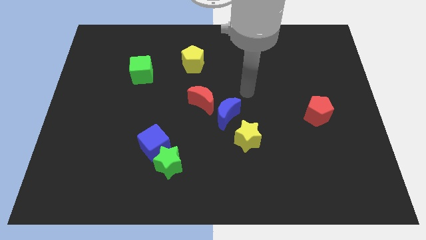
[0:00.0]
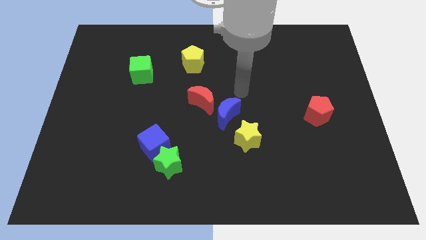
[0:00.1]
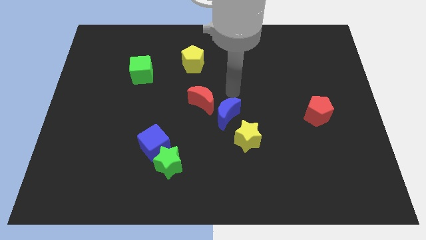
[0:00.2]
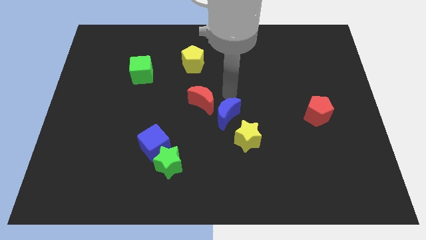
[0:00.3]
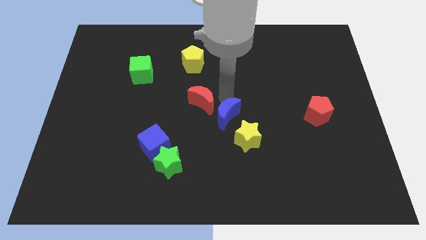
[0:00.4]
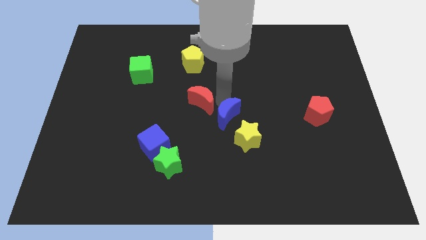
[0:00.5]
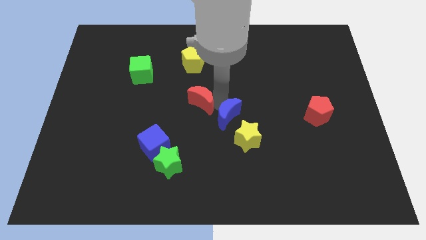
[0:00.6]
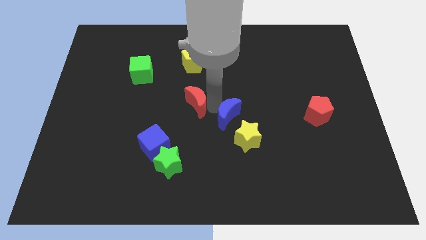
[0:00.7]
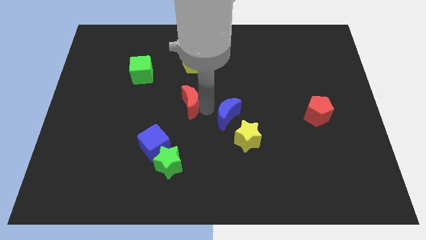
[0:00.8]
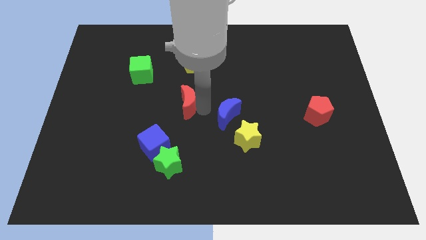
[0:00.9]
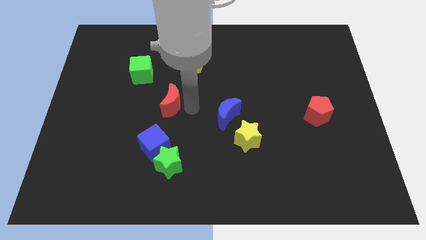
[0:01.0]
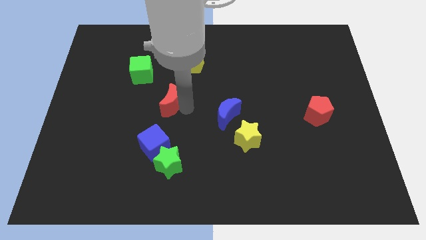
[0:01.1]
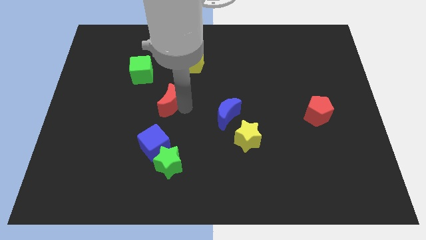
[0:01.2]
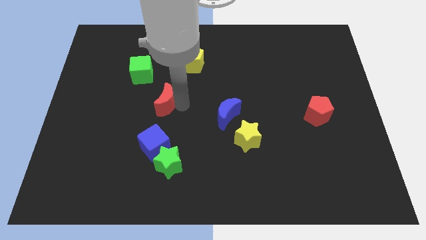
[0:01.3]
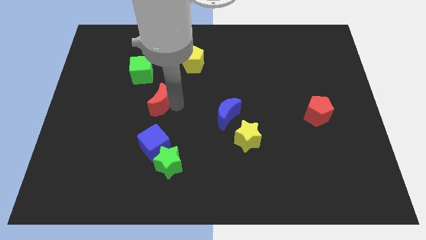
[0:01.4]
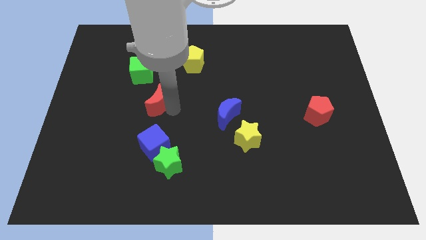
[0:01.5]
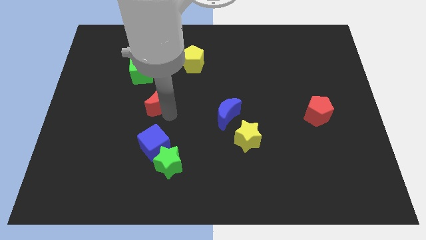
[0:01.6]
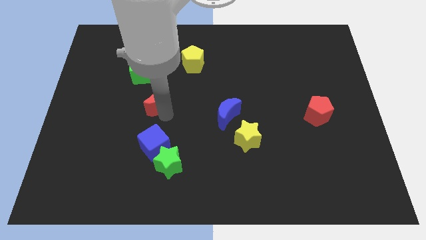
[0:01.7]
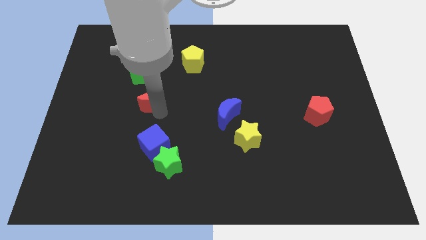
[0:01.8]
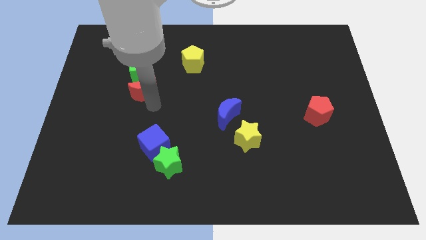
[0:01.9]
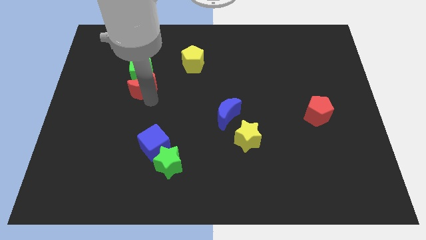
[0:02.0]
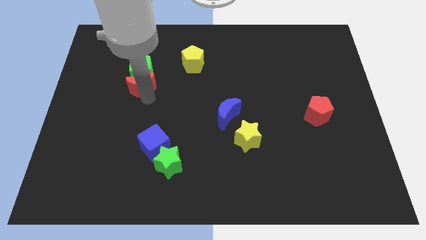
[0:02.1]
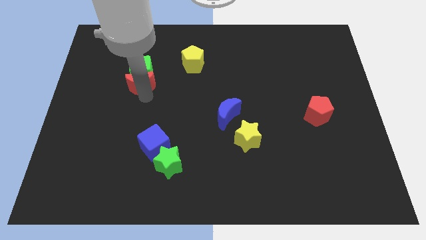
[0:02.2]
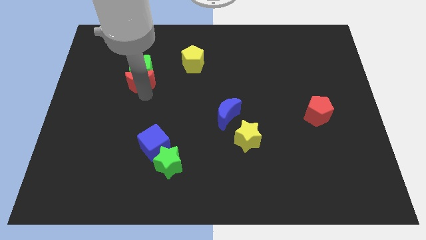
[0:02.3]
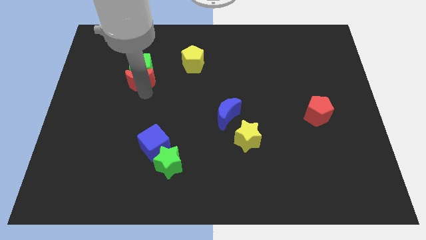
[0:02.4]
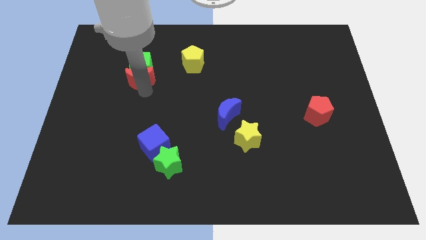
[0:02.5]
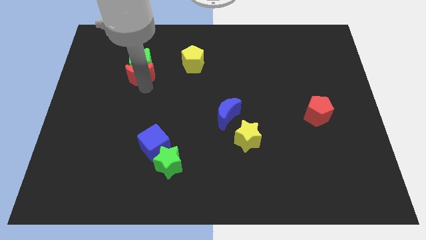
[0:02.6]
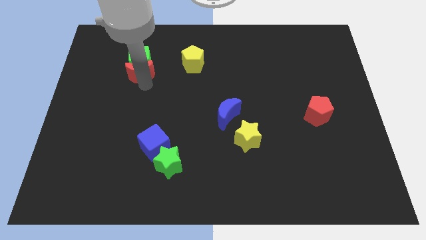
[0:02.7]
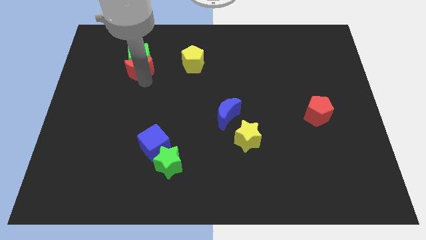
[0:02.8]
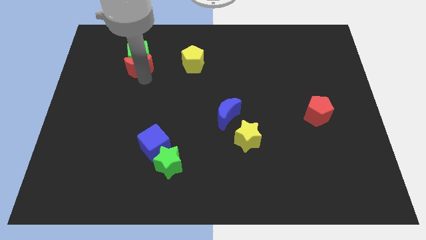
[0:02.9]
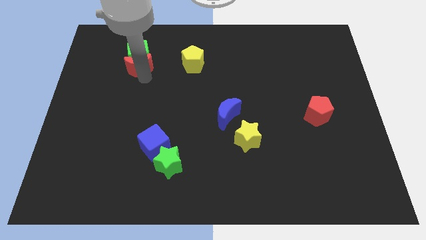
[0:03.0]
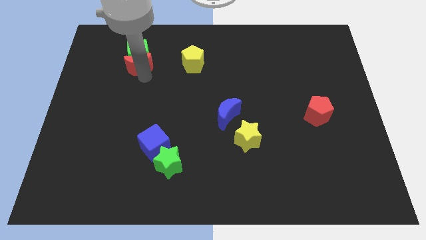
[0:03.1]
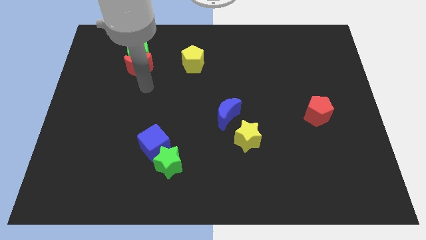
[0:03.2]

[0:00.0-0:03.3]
push the red moon into the green cube

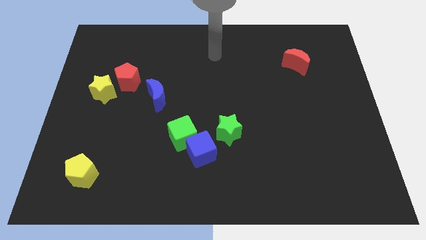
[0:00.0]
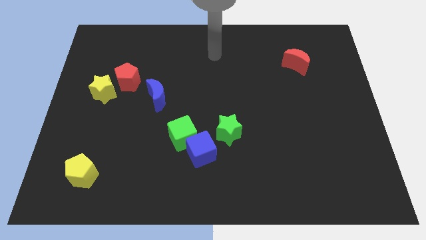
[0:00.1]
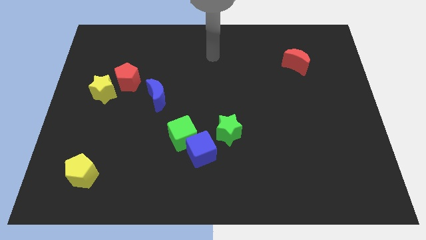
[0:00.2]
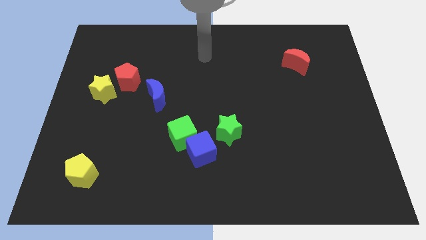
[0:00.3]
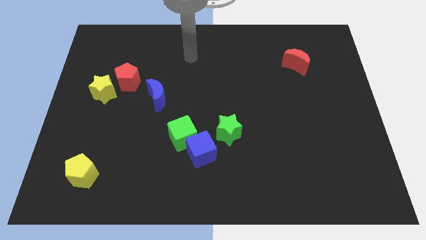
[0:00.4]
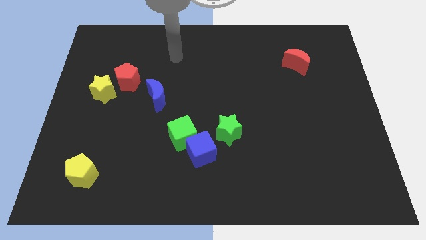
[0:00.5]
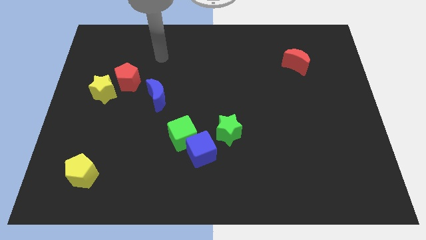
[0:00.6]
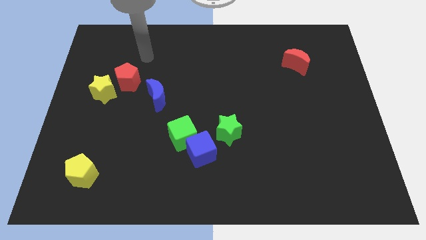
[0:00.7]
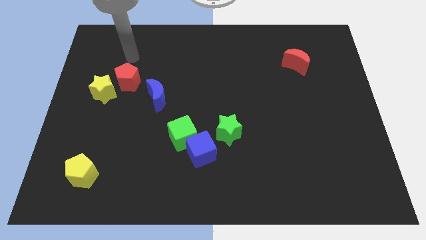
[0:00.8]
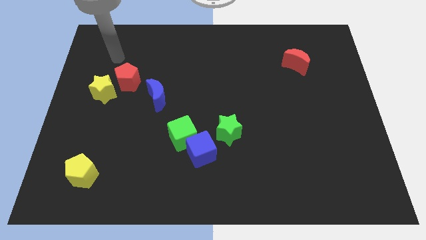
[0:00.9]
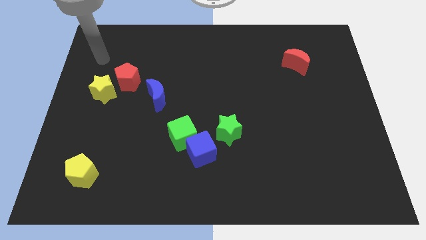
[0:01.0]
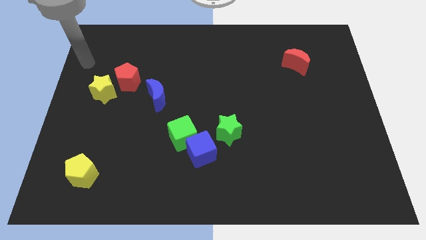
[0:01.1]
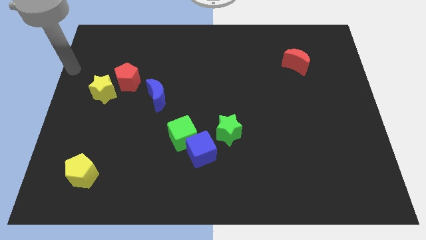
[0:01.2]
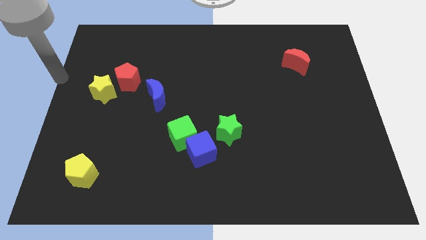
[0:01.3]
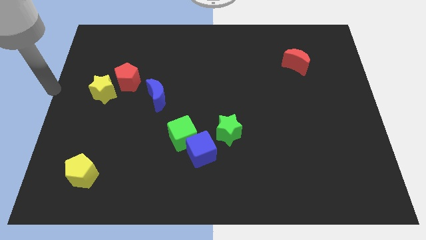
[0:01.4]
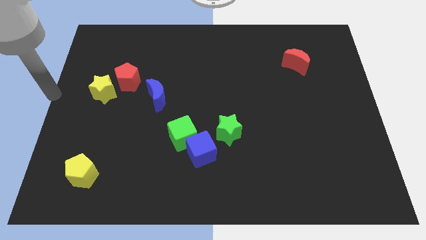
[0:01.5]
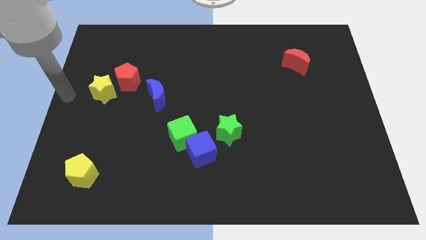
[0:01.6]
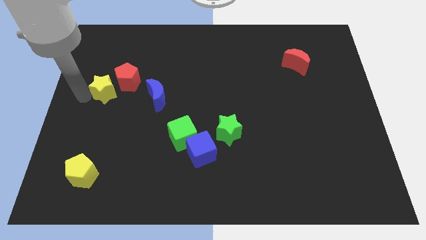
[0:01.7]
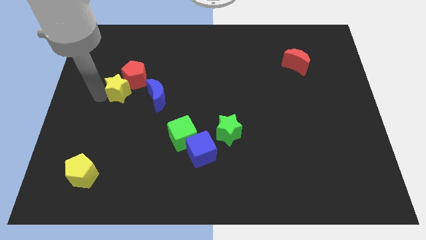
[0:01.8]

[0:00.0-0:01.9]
move the yellow star into the red pentagon

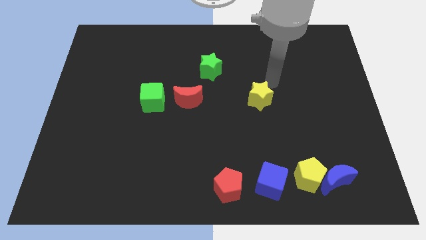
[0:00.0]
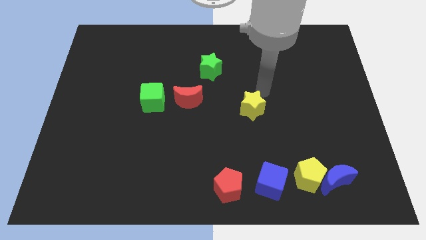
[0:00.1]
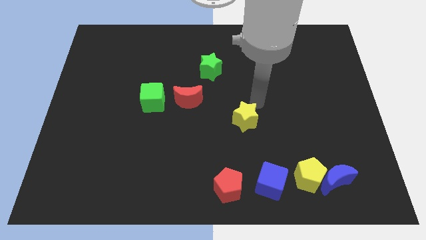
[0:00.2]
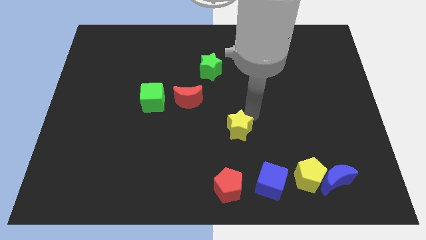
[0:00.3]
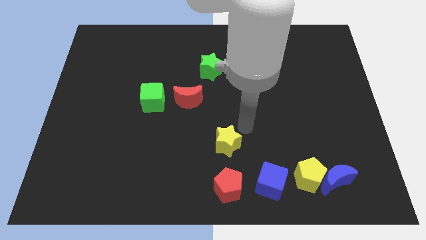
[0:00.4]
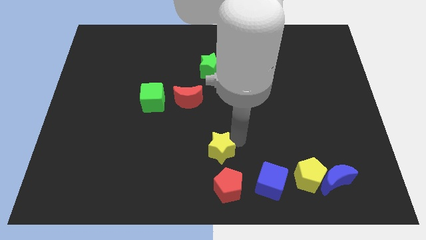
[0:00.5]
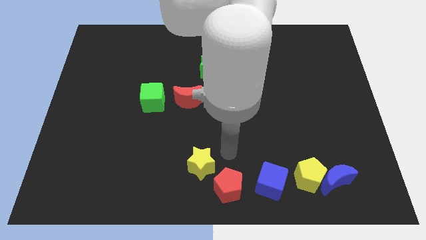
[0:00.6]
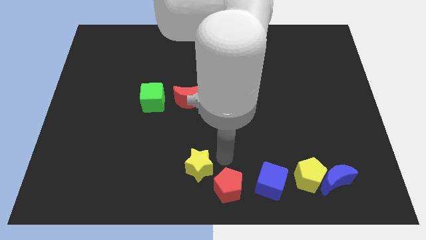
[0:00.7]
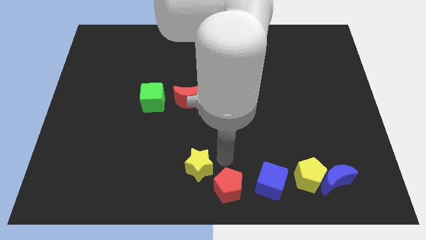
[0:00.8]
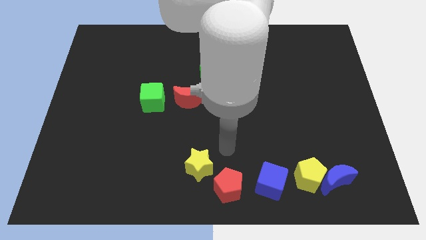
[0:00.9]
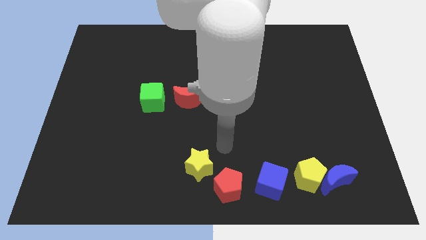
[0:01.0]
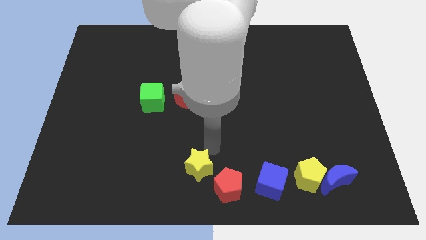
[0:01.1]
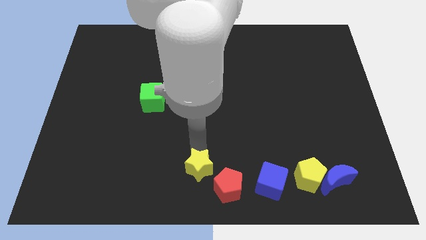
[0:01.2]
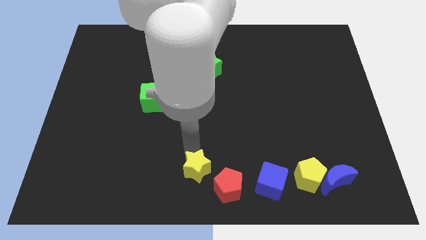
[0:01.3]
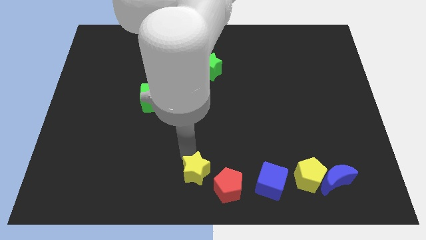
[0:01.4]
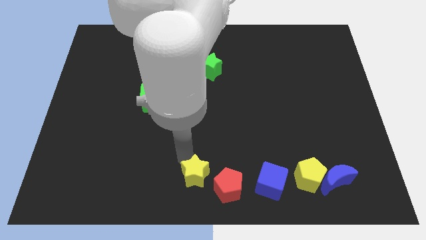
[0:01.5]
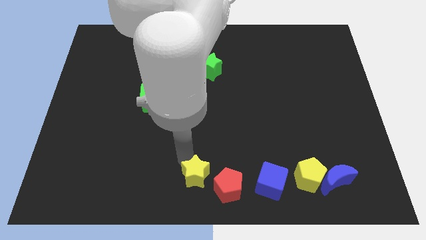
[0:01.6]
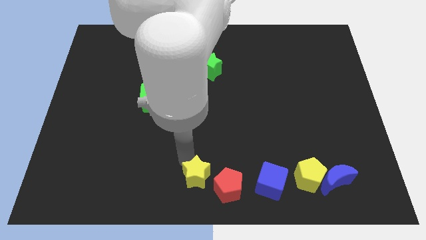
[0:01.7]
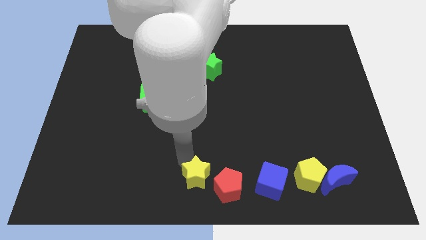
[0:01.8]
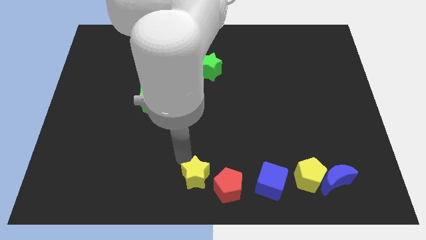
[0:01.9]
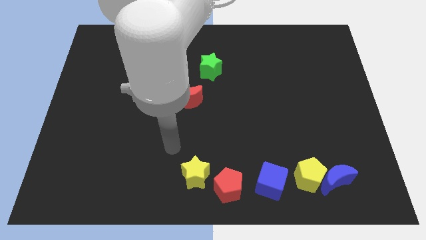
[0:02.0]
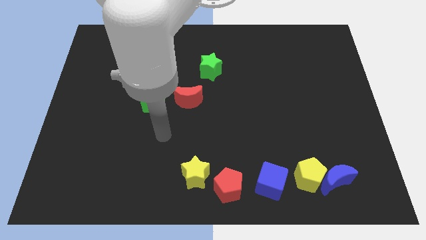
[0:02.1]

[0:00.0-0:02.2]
push the yellow star to the top left of red pentagon

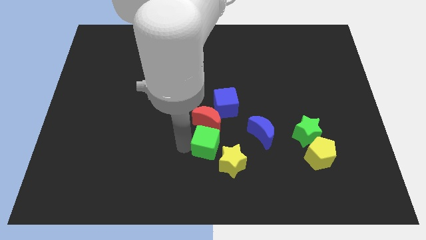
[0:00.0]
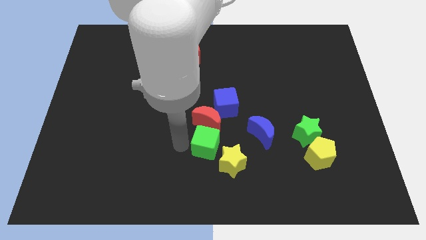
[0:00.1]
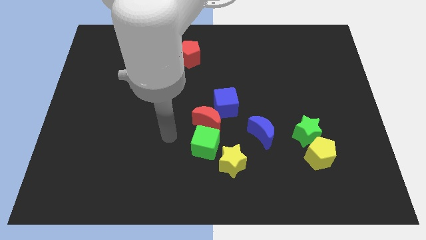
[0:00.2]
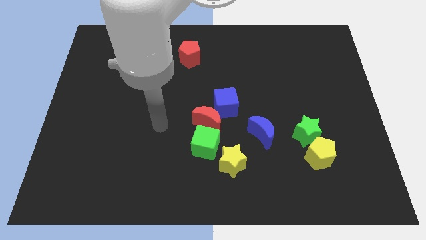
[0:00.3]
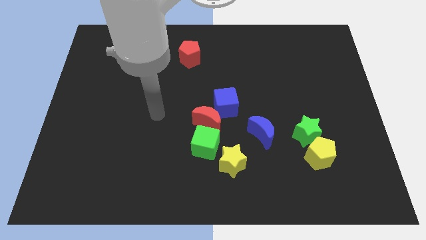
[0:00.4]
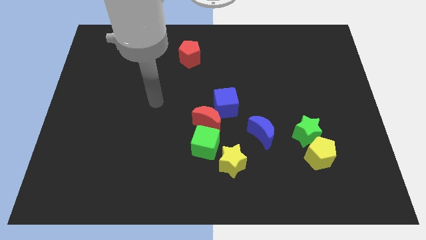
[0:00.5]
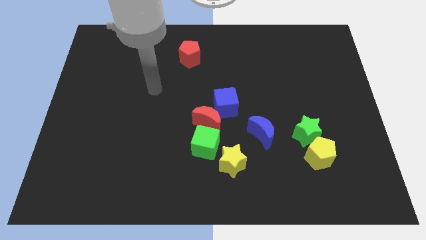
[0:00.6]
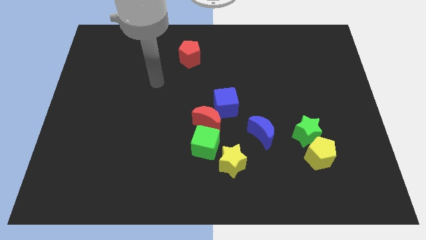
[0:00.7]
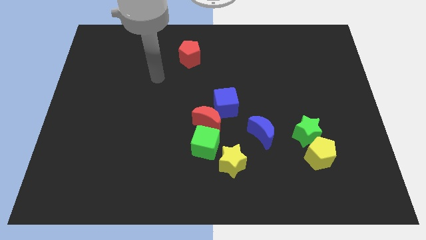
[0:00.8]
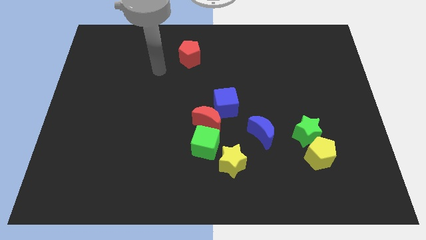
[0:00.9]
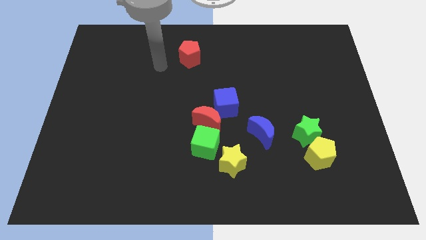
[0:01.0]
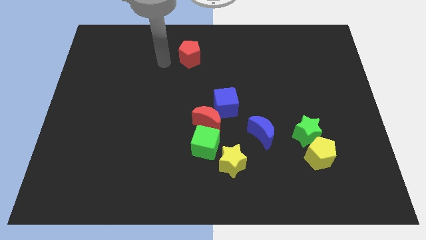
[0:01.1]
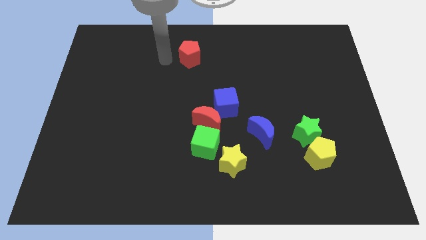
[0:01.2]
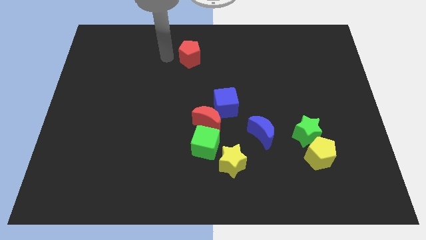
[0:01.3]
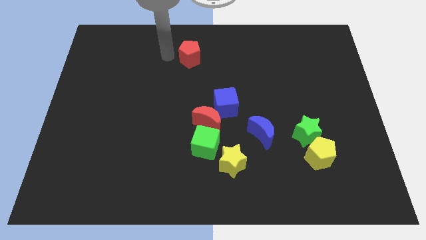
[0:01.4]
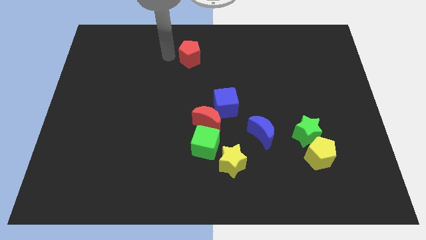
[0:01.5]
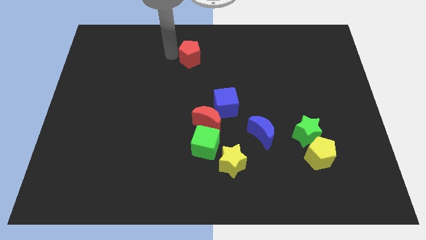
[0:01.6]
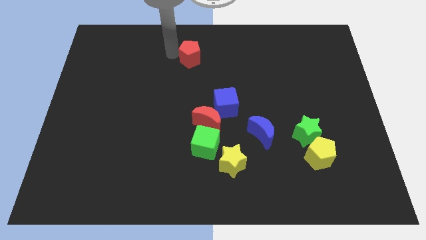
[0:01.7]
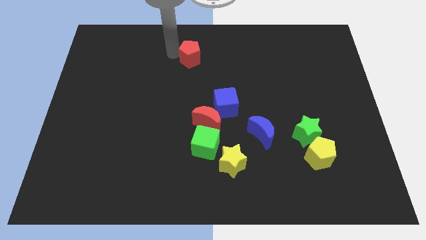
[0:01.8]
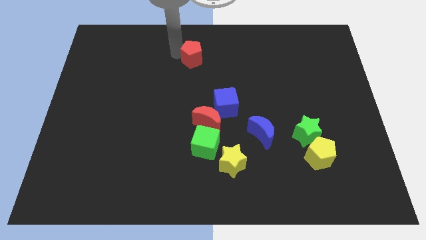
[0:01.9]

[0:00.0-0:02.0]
move your hand away from green cube
